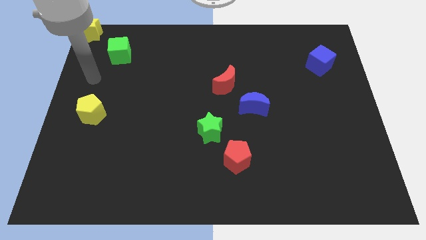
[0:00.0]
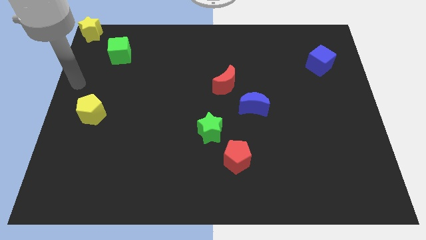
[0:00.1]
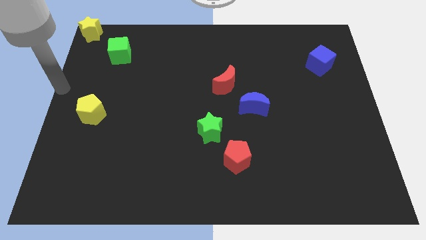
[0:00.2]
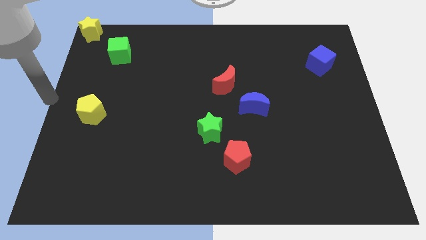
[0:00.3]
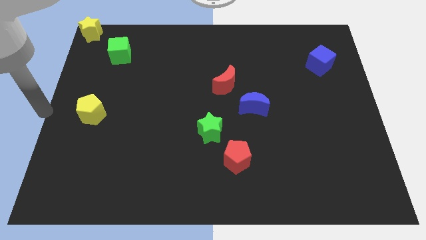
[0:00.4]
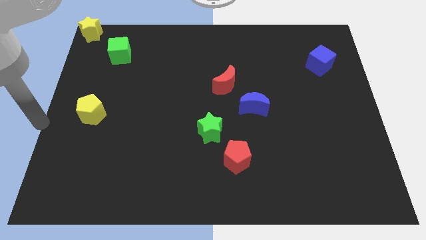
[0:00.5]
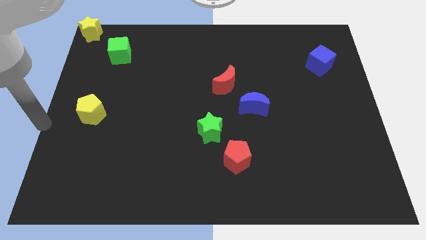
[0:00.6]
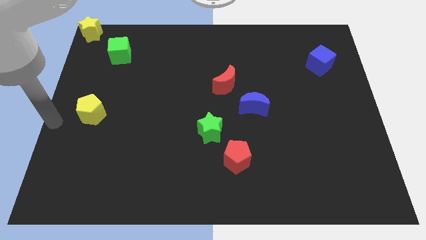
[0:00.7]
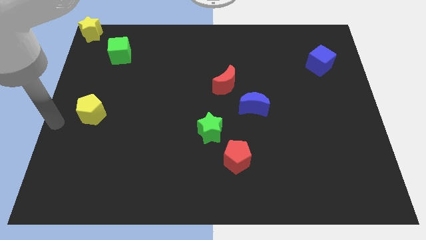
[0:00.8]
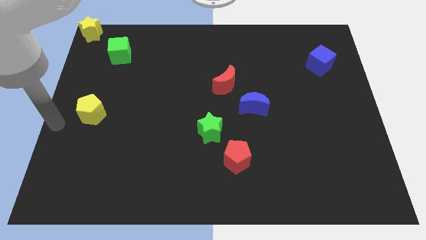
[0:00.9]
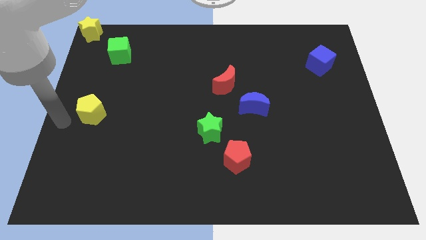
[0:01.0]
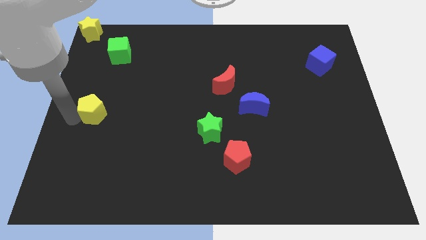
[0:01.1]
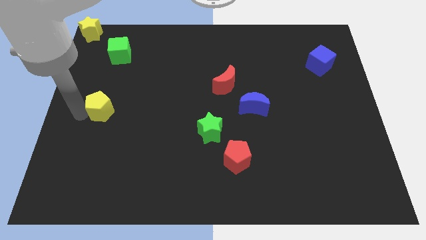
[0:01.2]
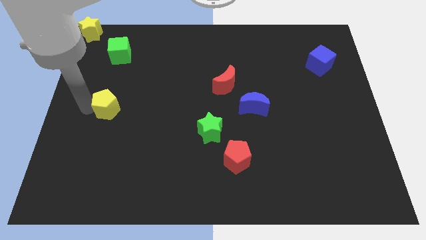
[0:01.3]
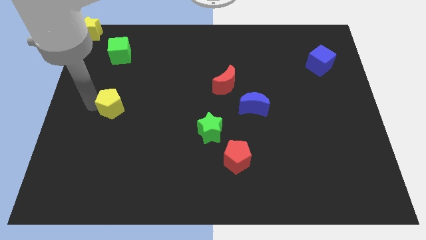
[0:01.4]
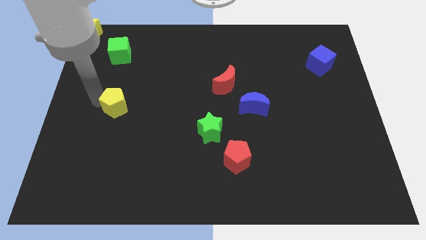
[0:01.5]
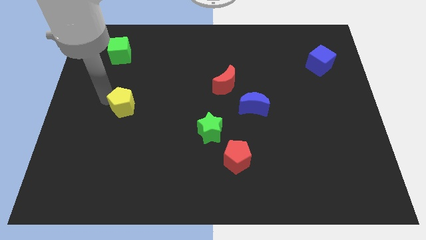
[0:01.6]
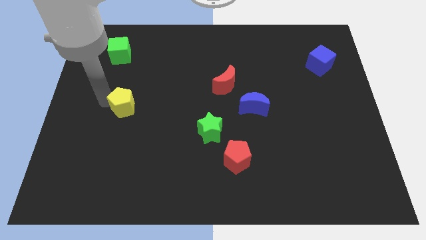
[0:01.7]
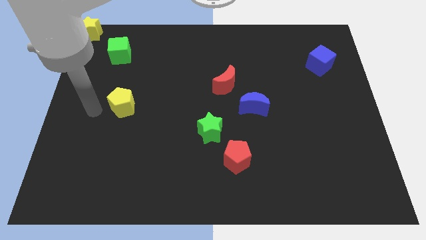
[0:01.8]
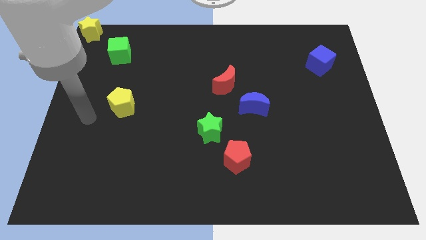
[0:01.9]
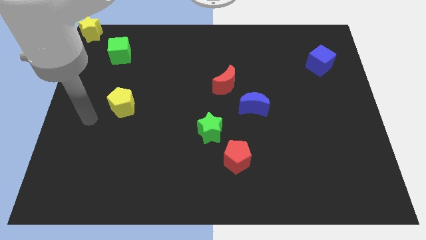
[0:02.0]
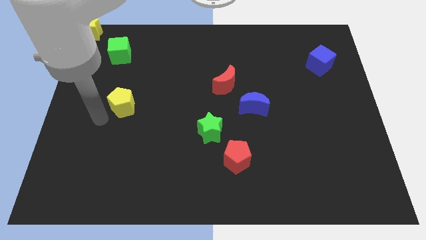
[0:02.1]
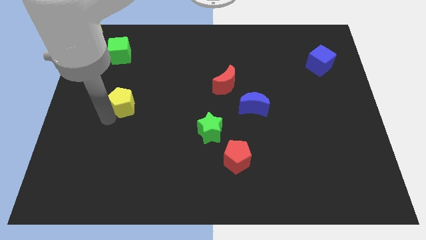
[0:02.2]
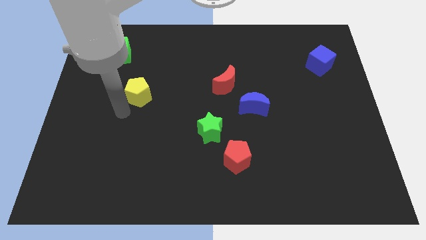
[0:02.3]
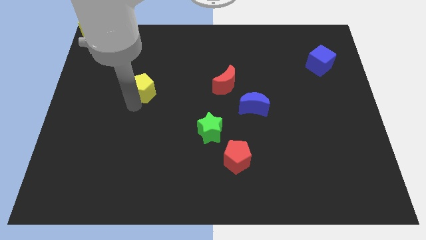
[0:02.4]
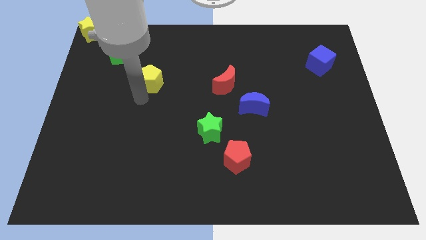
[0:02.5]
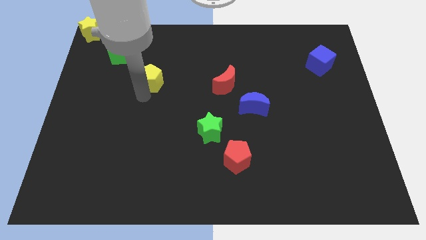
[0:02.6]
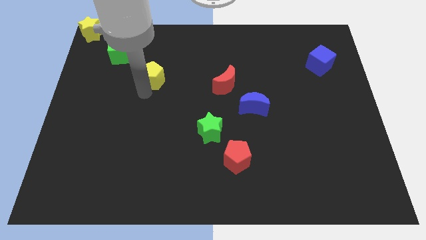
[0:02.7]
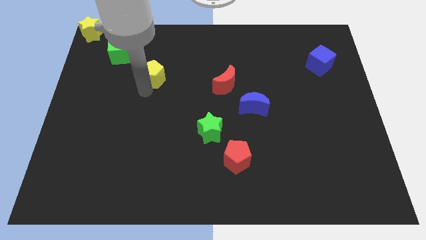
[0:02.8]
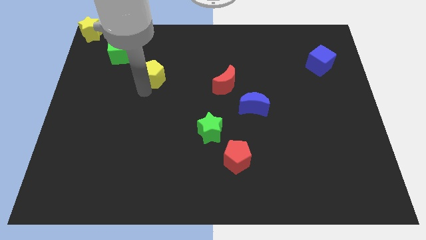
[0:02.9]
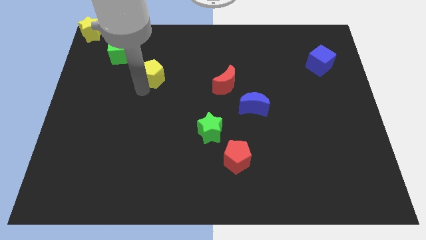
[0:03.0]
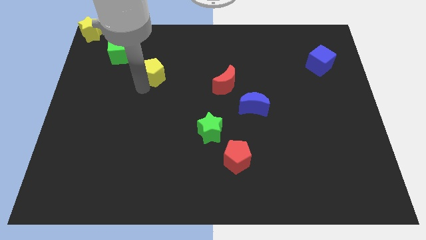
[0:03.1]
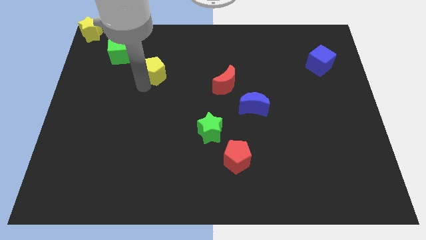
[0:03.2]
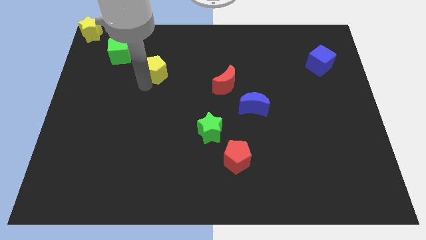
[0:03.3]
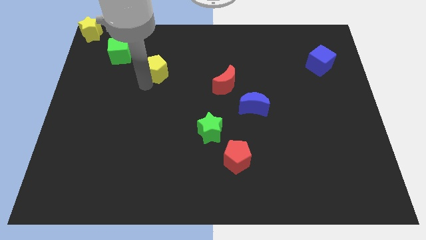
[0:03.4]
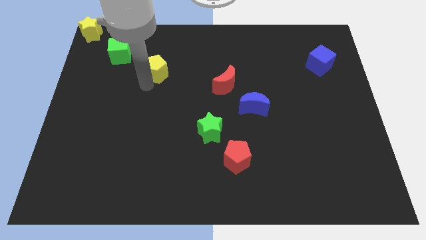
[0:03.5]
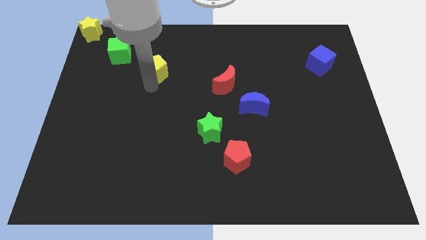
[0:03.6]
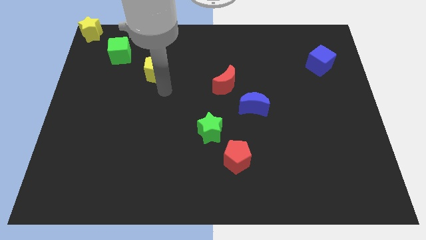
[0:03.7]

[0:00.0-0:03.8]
place the yellow pentagon to the left of the red moon

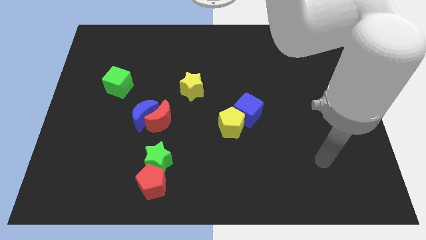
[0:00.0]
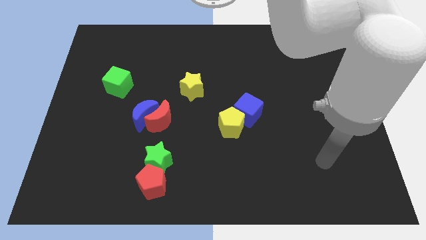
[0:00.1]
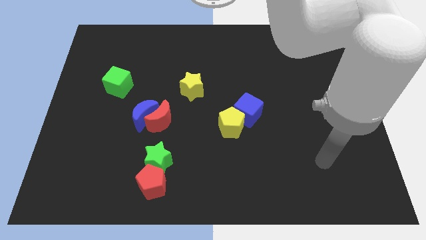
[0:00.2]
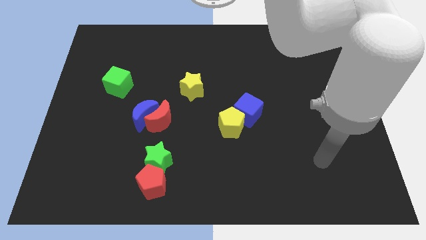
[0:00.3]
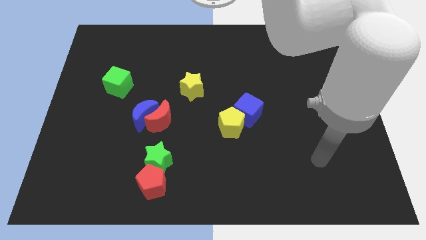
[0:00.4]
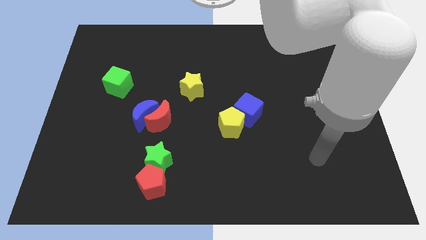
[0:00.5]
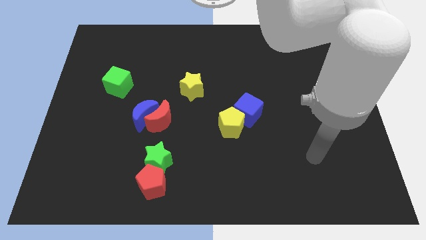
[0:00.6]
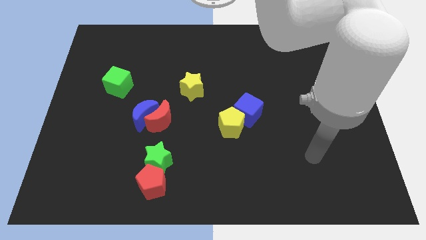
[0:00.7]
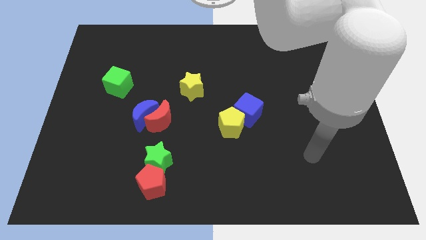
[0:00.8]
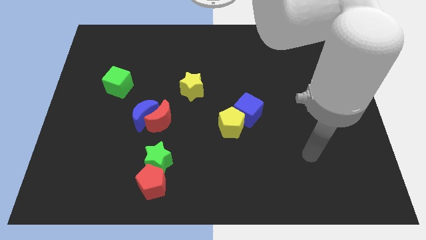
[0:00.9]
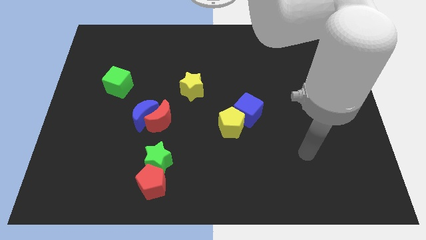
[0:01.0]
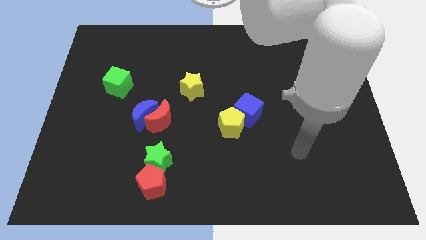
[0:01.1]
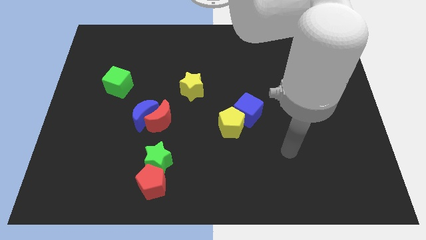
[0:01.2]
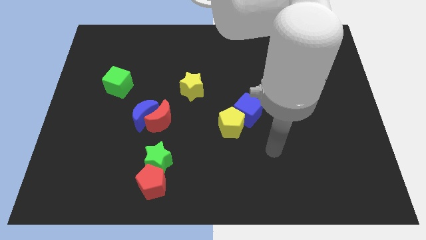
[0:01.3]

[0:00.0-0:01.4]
move your arm towards the yellow pentagon

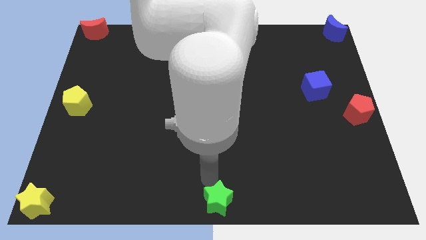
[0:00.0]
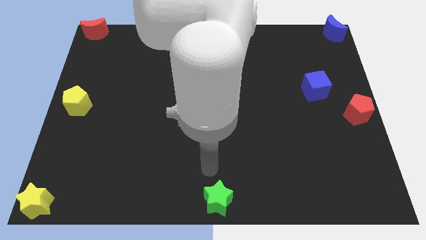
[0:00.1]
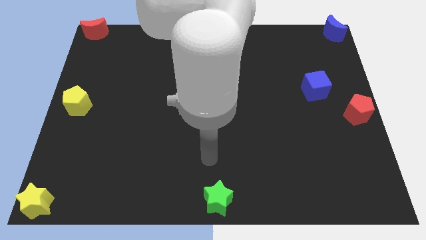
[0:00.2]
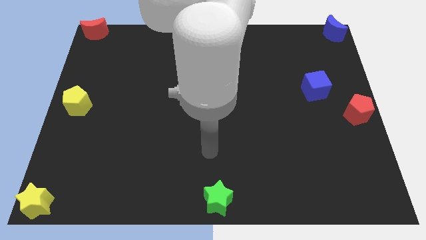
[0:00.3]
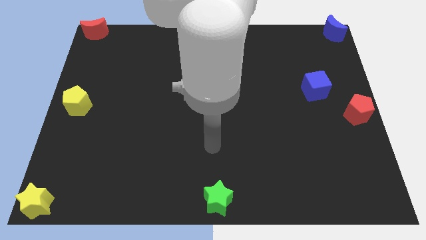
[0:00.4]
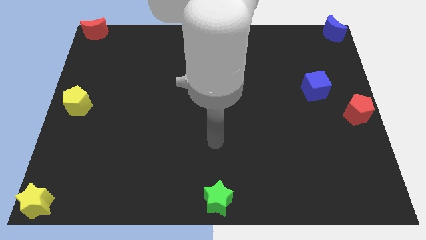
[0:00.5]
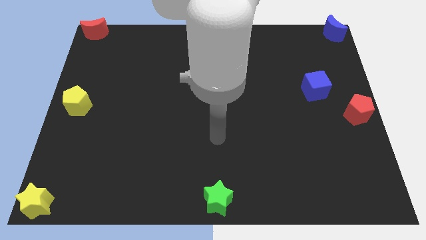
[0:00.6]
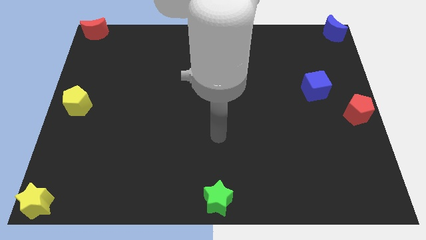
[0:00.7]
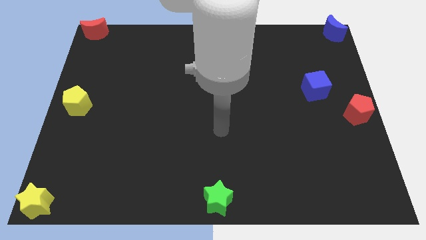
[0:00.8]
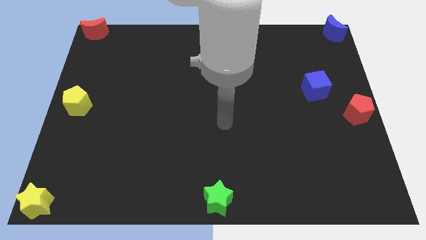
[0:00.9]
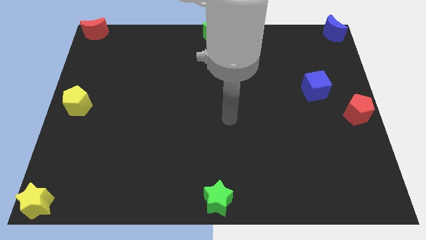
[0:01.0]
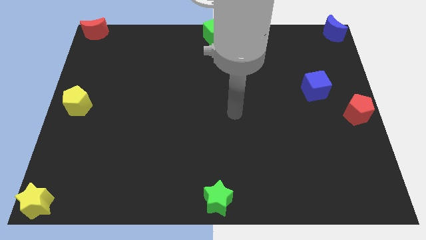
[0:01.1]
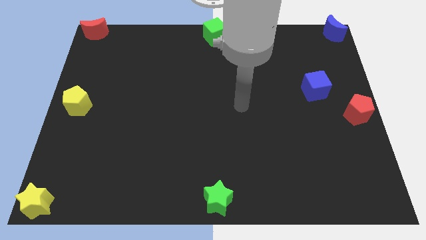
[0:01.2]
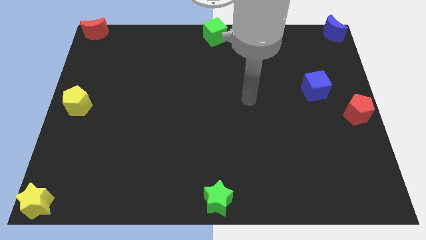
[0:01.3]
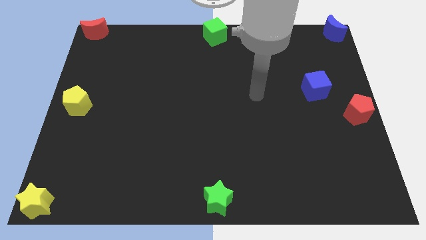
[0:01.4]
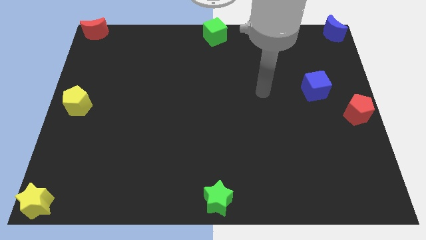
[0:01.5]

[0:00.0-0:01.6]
move your arm towards the top side of the board

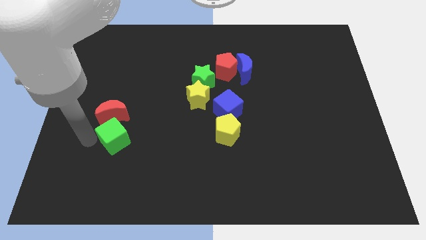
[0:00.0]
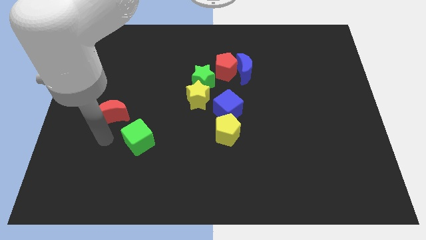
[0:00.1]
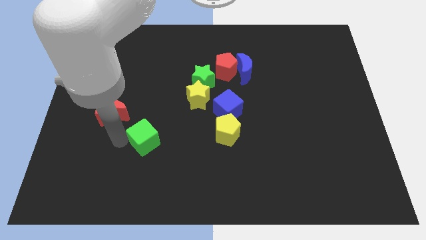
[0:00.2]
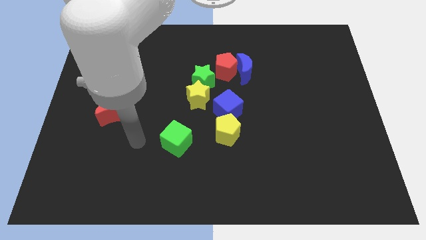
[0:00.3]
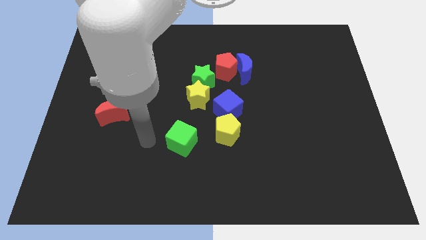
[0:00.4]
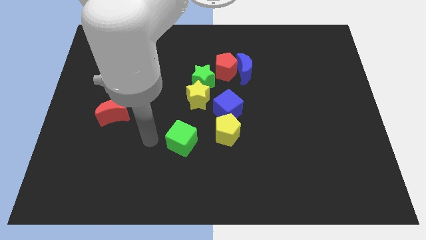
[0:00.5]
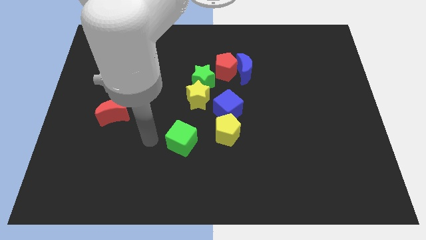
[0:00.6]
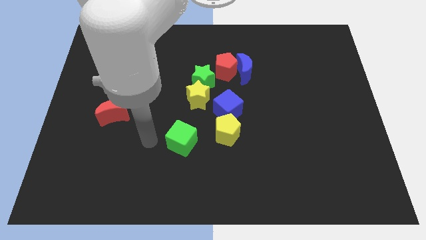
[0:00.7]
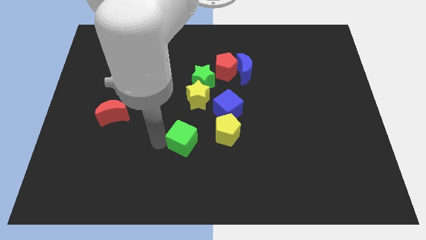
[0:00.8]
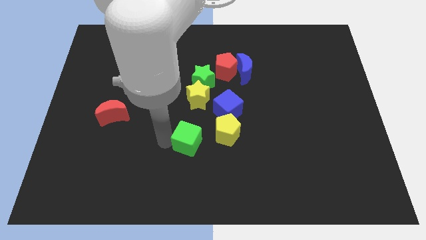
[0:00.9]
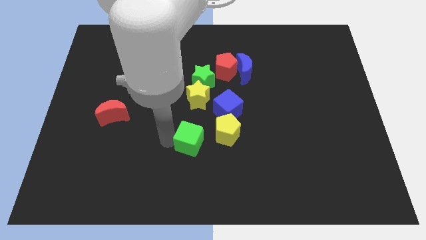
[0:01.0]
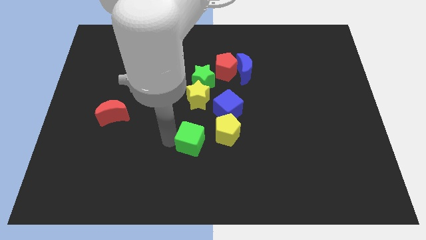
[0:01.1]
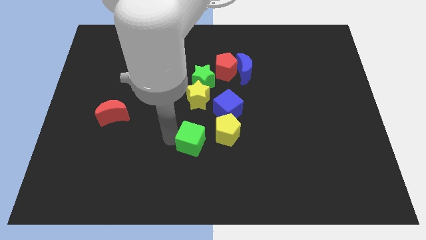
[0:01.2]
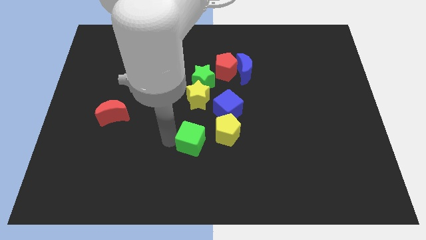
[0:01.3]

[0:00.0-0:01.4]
move the green cube at the left side of the yellow pentagon

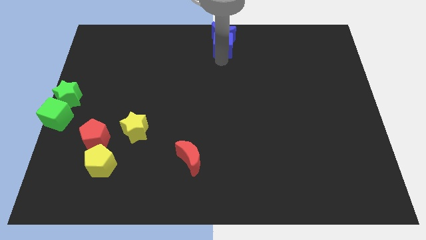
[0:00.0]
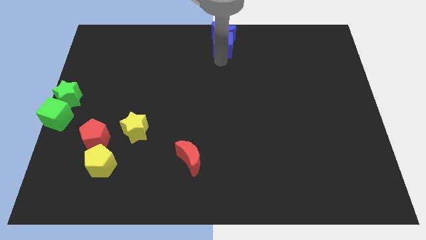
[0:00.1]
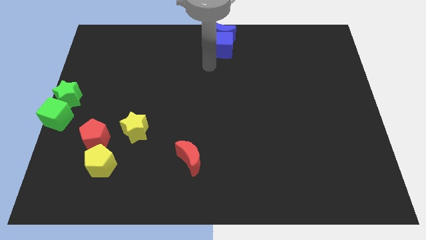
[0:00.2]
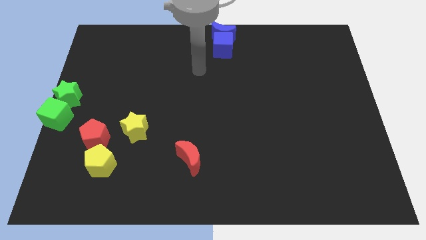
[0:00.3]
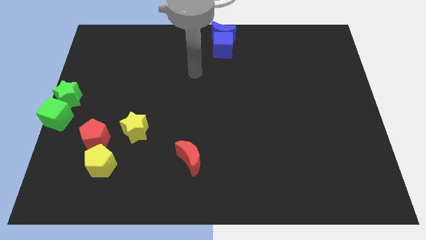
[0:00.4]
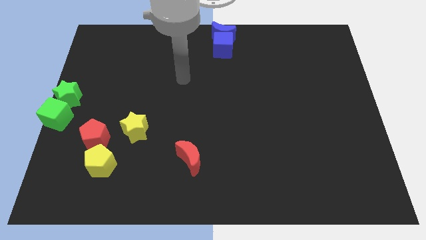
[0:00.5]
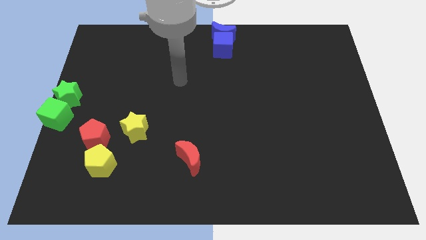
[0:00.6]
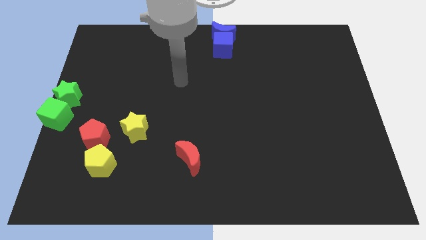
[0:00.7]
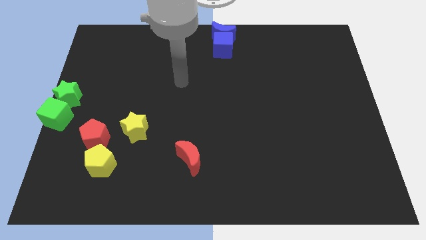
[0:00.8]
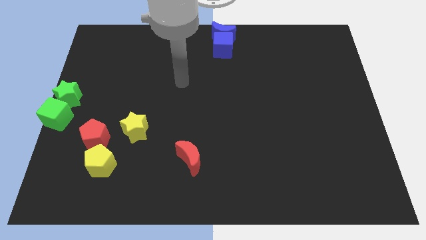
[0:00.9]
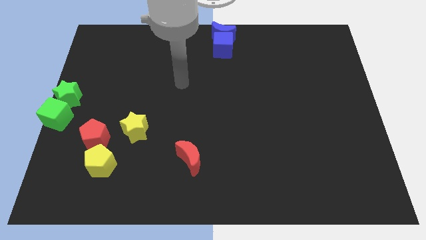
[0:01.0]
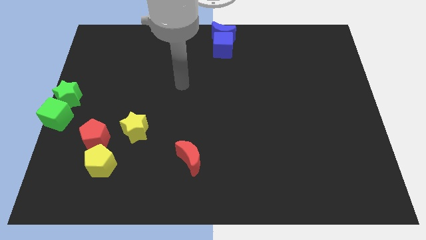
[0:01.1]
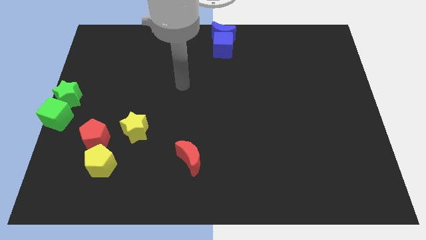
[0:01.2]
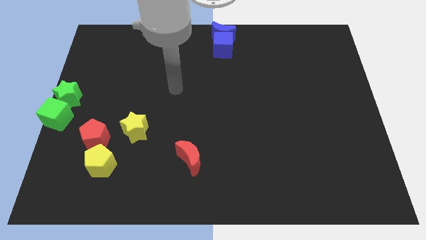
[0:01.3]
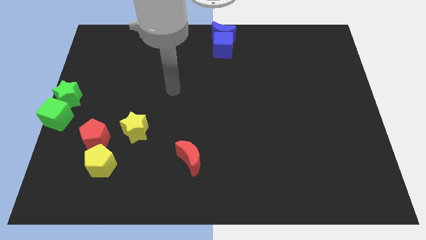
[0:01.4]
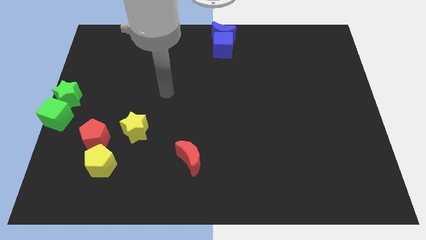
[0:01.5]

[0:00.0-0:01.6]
move your arm away from the blue cube
